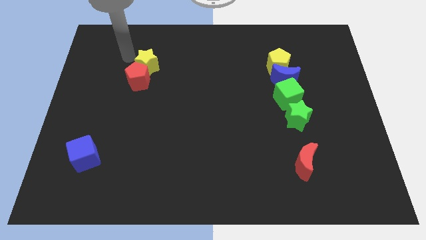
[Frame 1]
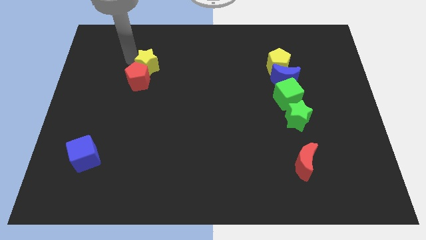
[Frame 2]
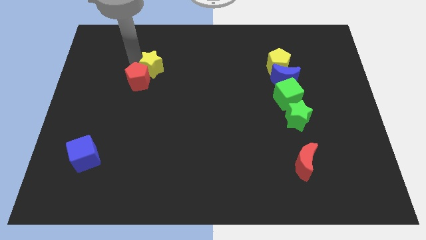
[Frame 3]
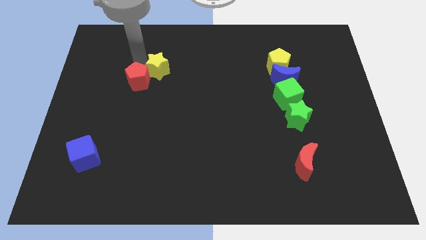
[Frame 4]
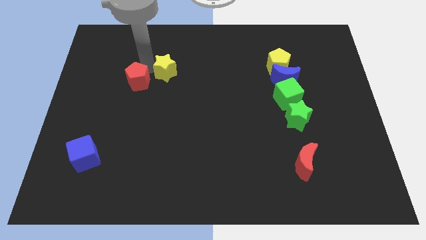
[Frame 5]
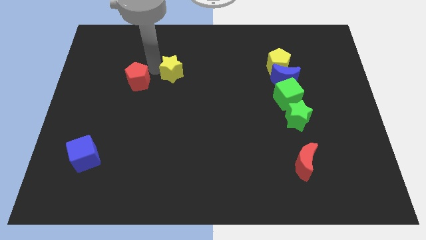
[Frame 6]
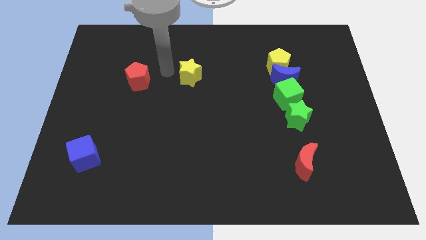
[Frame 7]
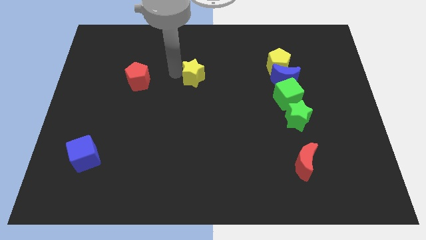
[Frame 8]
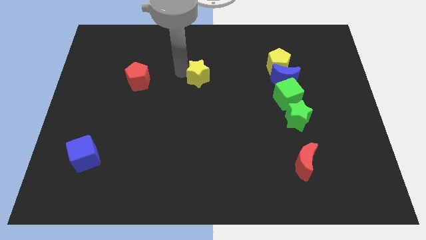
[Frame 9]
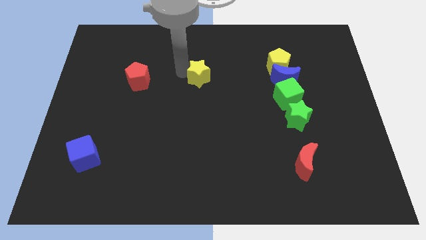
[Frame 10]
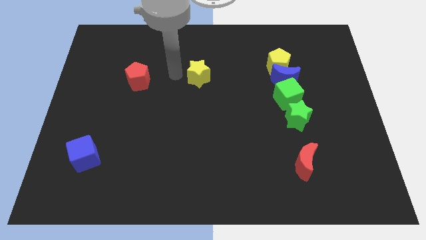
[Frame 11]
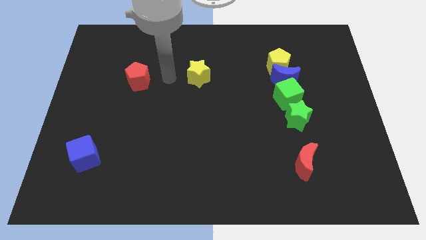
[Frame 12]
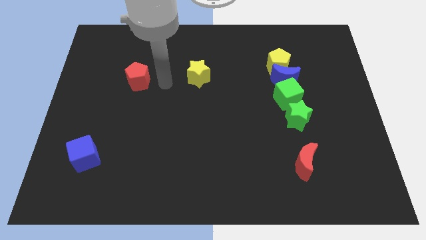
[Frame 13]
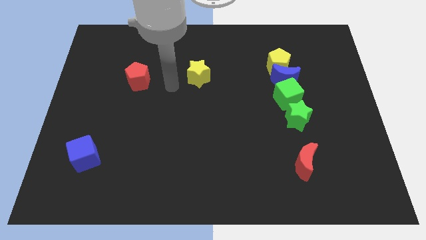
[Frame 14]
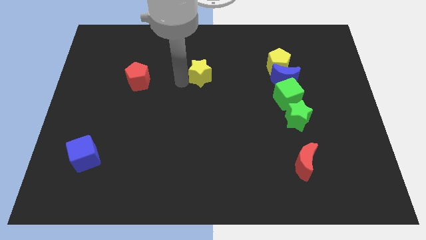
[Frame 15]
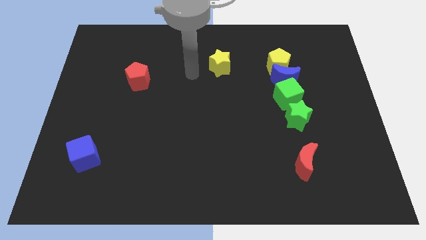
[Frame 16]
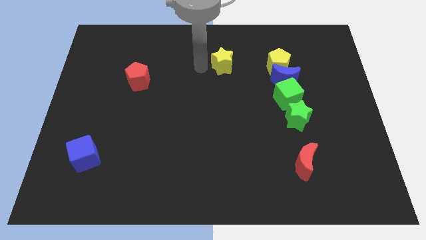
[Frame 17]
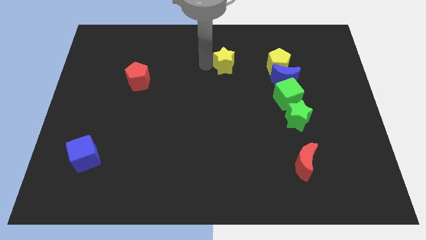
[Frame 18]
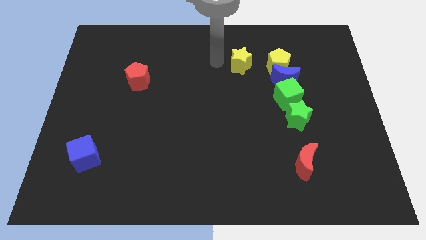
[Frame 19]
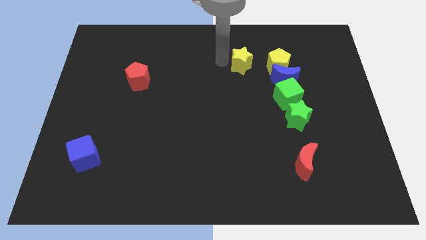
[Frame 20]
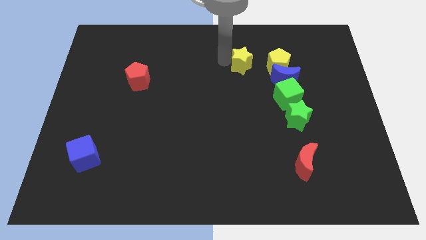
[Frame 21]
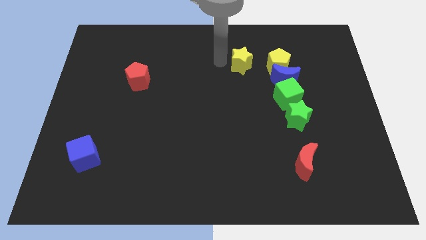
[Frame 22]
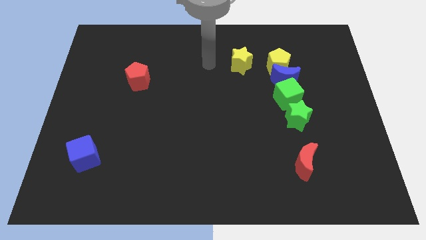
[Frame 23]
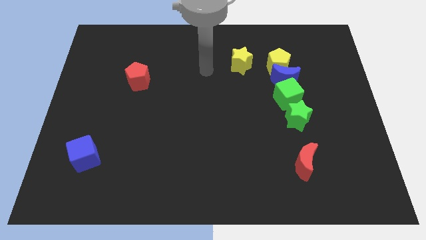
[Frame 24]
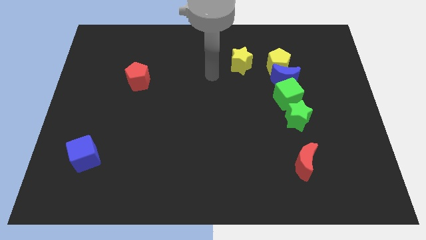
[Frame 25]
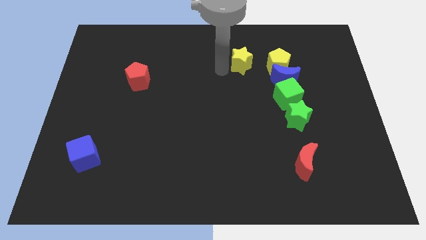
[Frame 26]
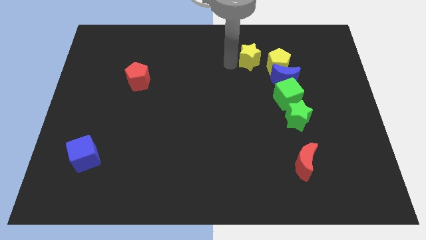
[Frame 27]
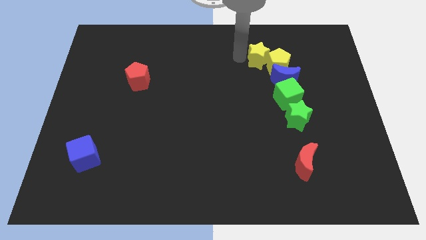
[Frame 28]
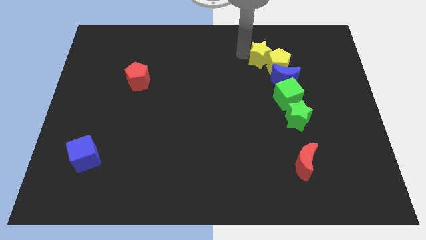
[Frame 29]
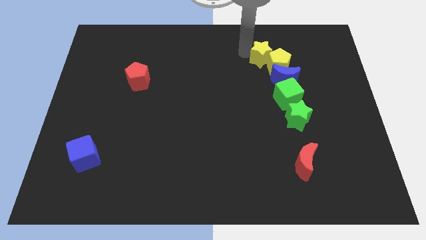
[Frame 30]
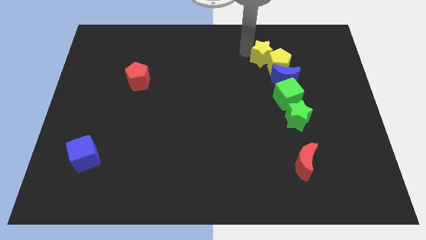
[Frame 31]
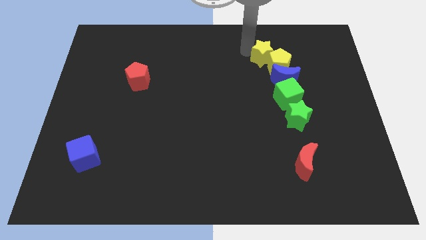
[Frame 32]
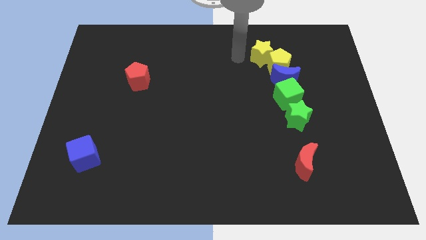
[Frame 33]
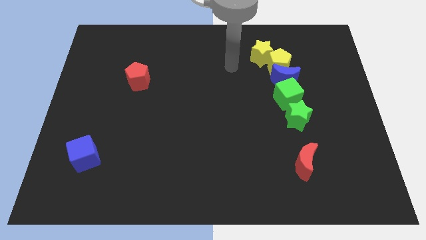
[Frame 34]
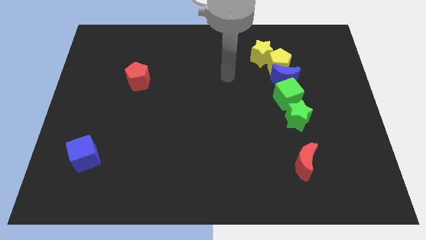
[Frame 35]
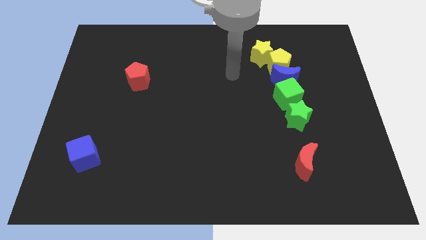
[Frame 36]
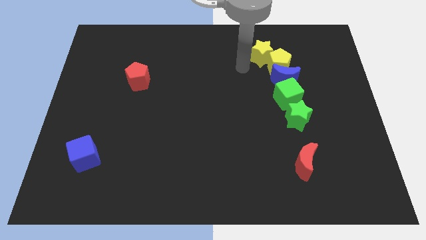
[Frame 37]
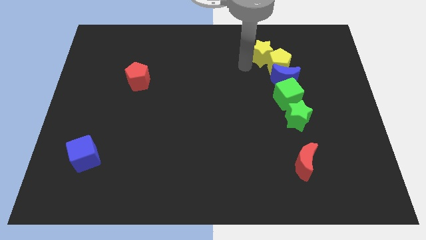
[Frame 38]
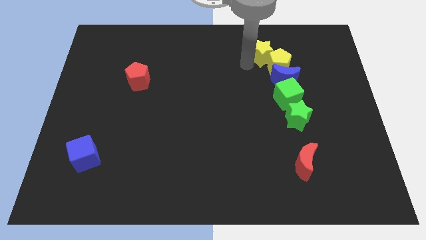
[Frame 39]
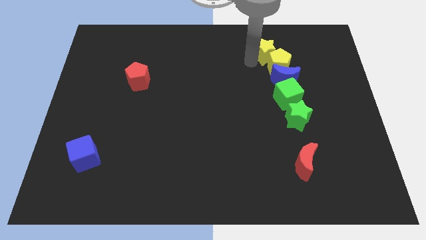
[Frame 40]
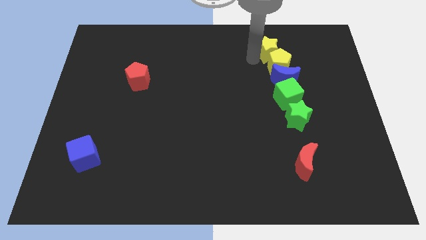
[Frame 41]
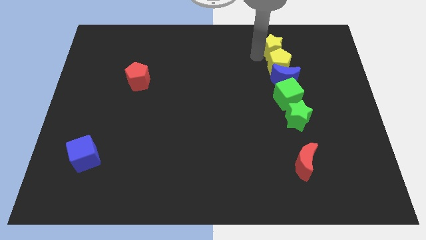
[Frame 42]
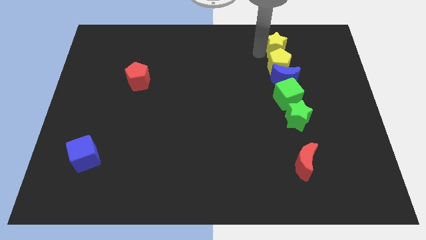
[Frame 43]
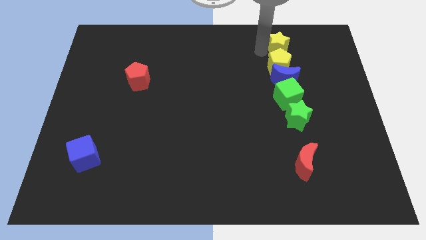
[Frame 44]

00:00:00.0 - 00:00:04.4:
push the yellow star towards the right side of the board

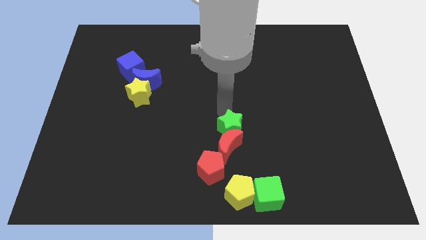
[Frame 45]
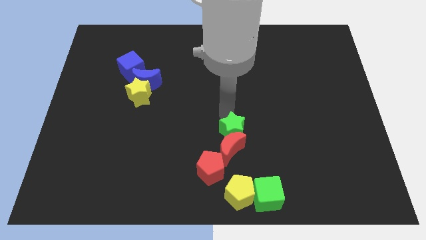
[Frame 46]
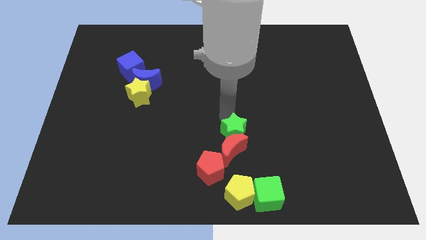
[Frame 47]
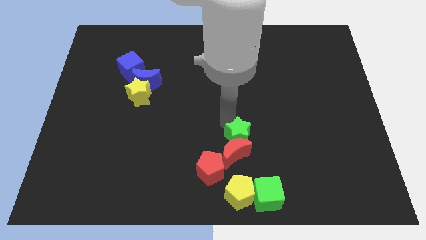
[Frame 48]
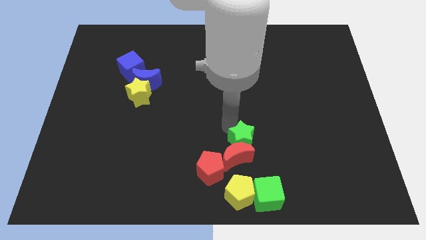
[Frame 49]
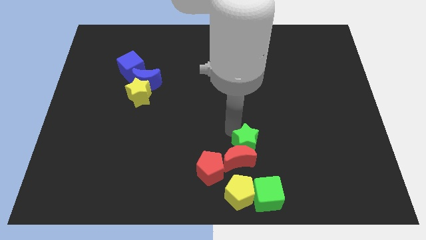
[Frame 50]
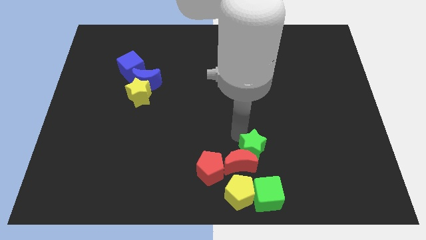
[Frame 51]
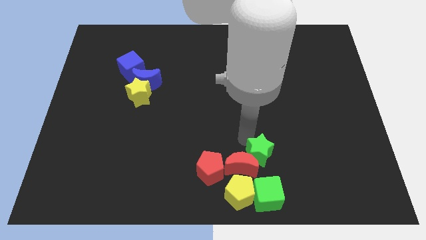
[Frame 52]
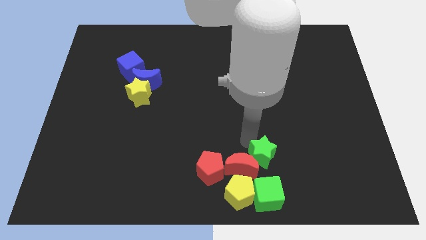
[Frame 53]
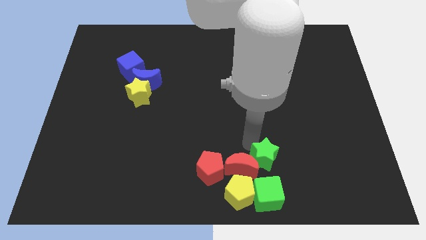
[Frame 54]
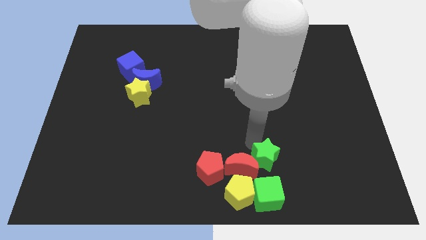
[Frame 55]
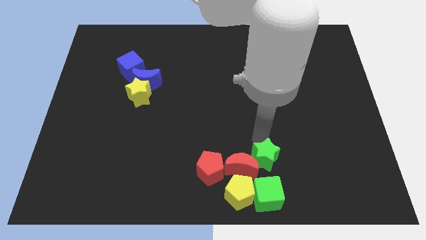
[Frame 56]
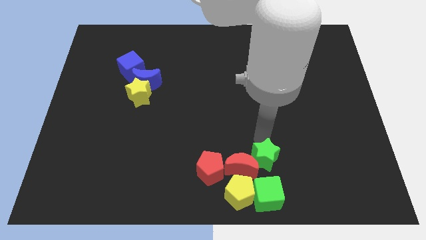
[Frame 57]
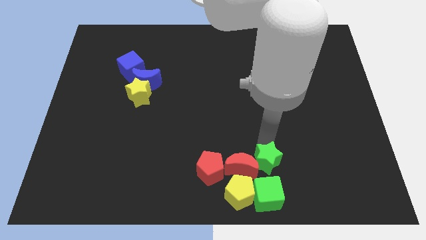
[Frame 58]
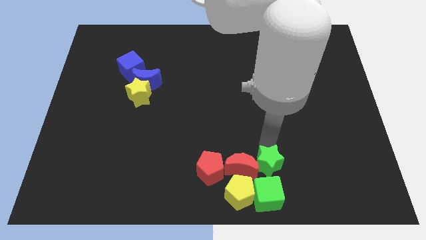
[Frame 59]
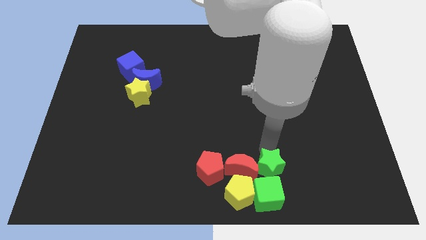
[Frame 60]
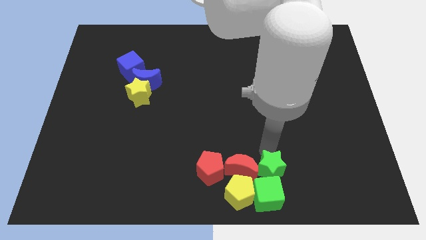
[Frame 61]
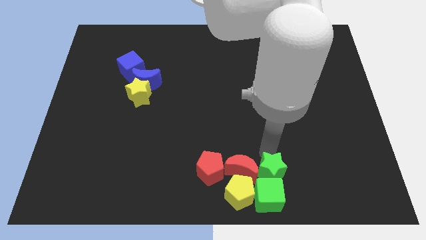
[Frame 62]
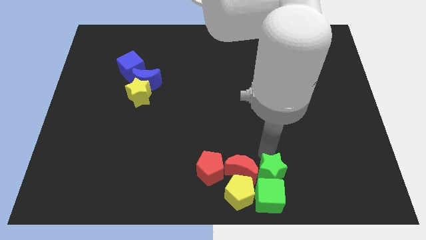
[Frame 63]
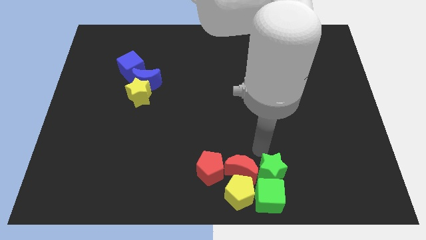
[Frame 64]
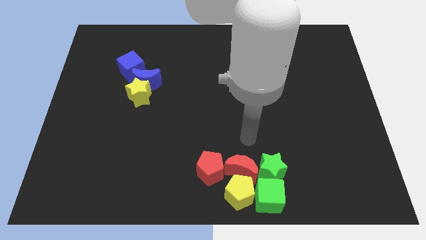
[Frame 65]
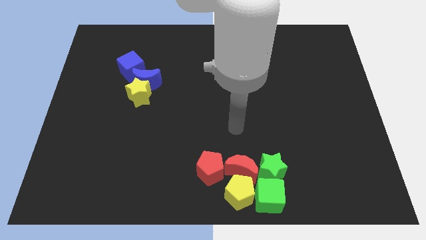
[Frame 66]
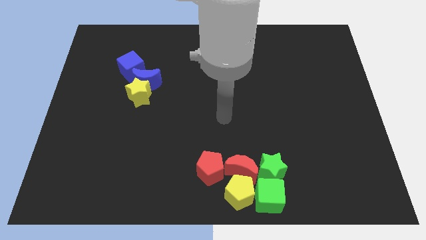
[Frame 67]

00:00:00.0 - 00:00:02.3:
push the green star on top of the green cube

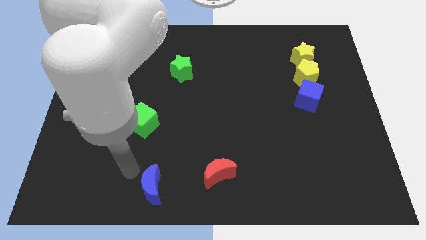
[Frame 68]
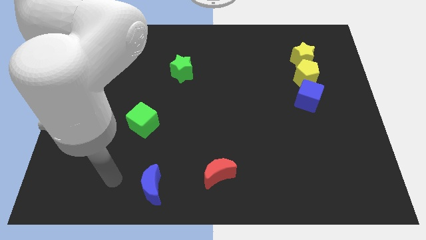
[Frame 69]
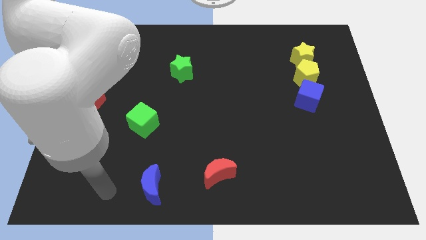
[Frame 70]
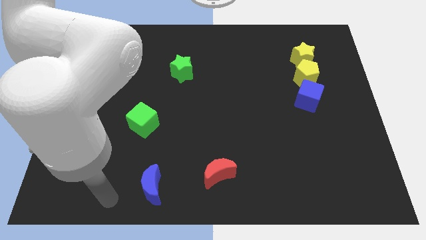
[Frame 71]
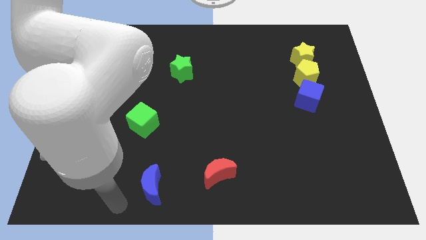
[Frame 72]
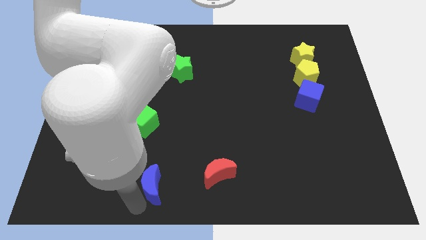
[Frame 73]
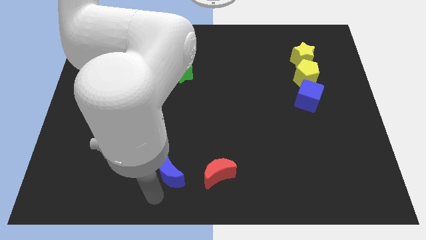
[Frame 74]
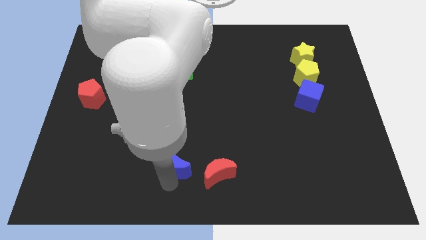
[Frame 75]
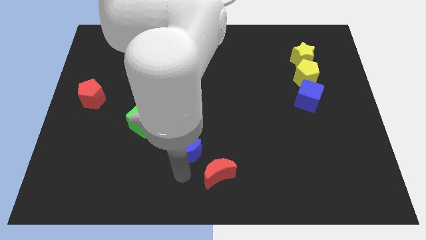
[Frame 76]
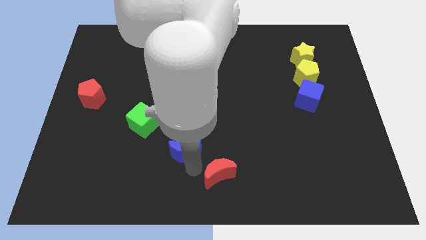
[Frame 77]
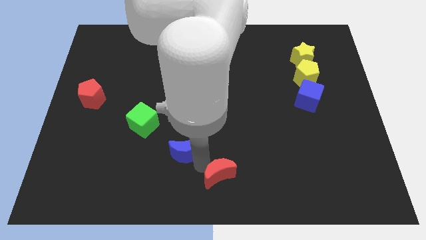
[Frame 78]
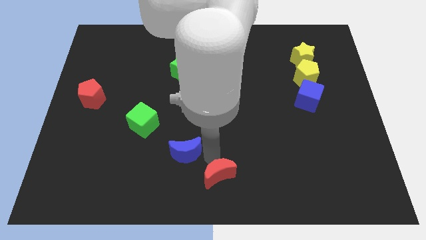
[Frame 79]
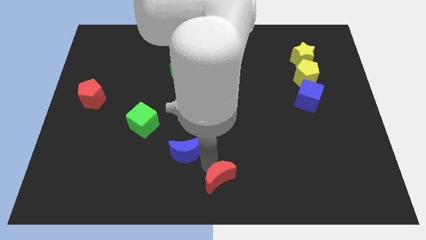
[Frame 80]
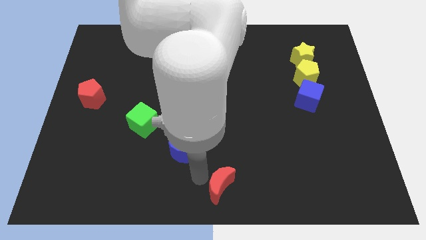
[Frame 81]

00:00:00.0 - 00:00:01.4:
place the blue moon in between green cube and red moon

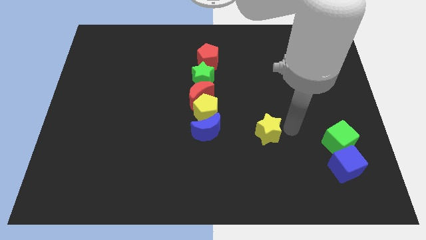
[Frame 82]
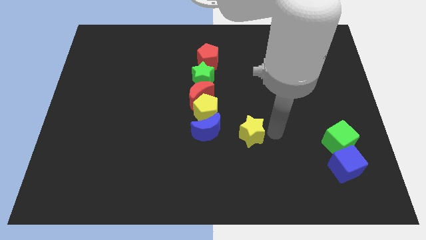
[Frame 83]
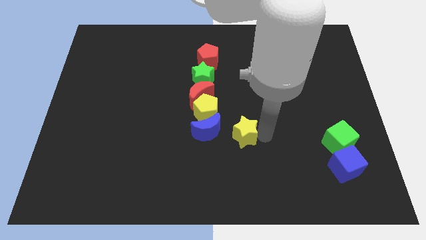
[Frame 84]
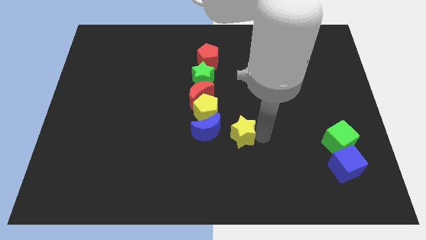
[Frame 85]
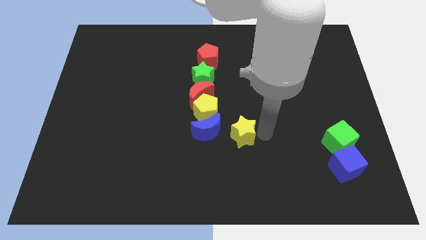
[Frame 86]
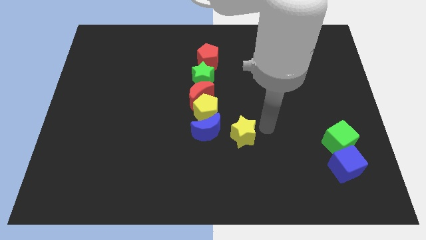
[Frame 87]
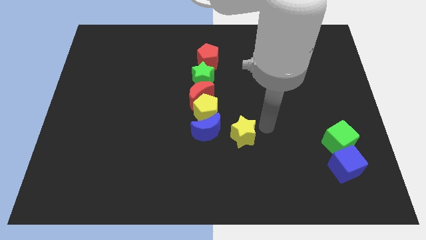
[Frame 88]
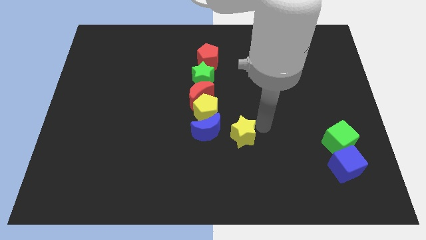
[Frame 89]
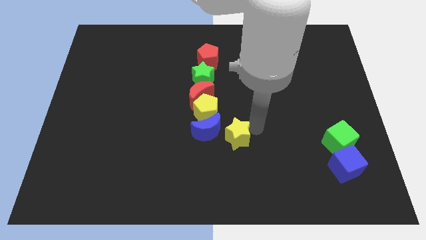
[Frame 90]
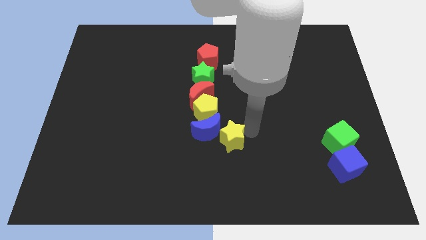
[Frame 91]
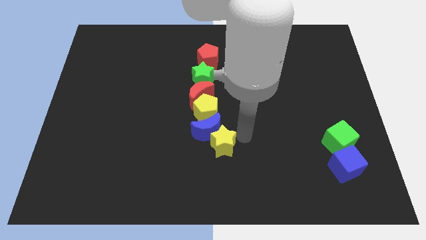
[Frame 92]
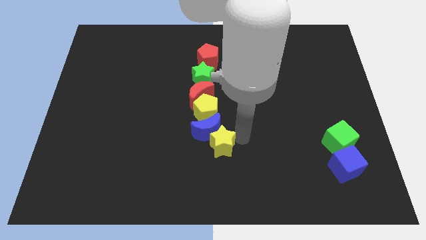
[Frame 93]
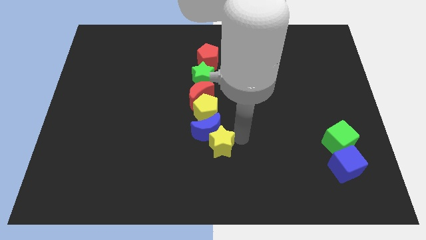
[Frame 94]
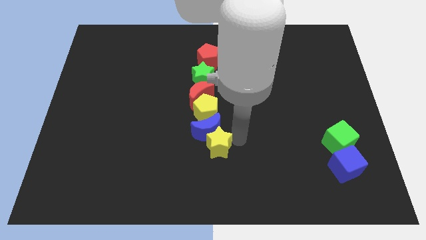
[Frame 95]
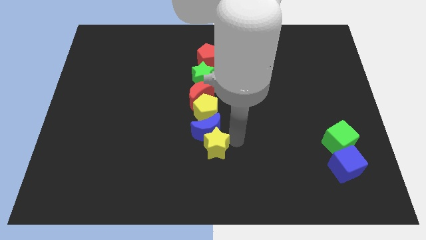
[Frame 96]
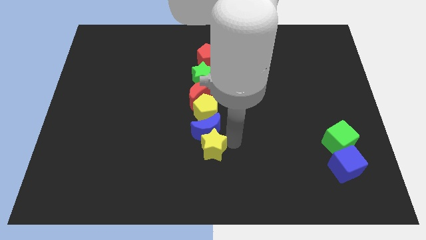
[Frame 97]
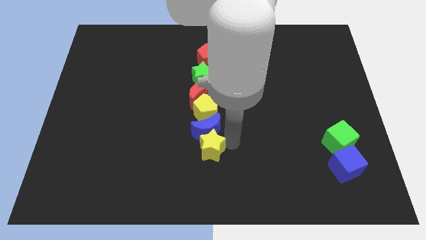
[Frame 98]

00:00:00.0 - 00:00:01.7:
place the yellow star below the blue crescent
